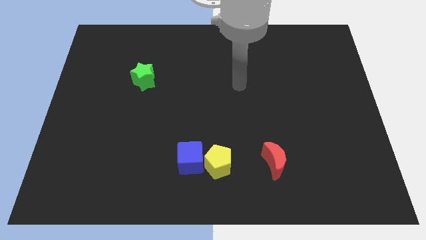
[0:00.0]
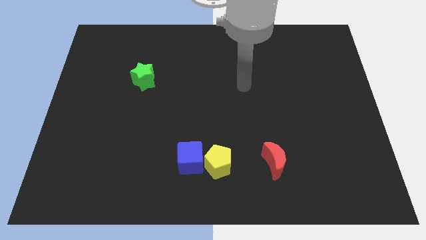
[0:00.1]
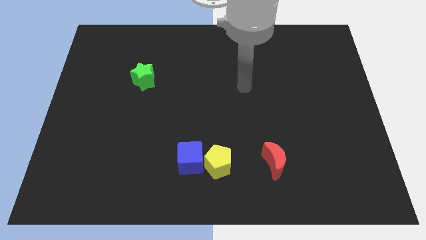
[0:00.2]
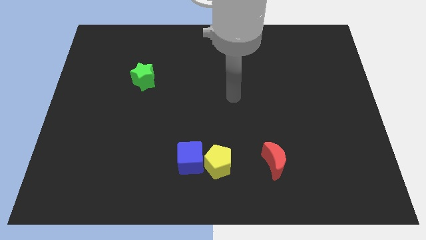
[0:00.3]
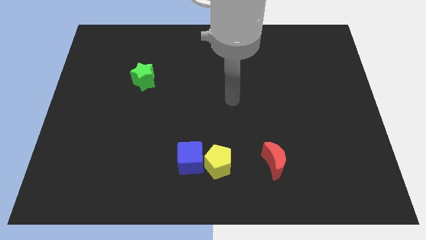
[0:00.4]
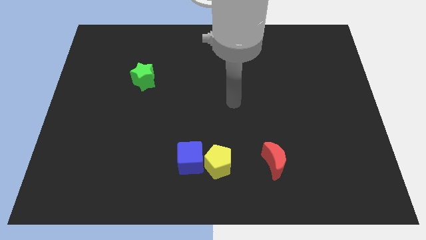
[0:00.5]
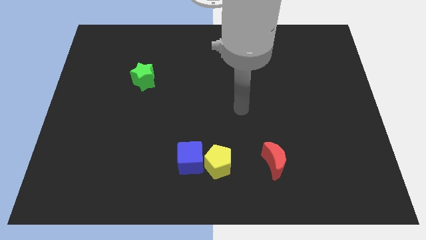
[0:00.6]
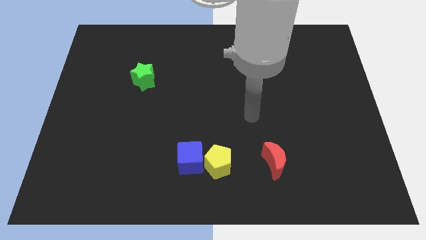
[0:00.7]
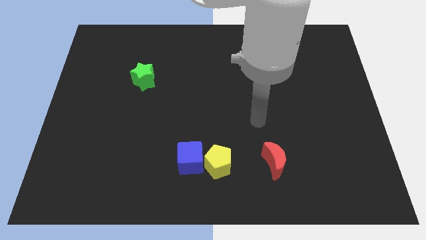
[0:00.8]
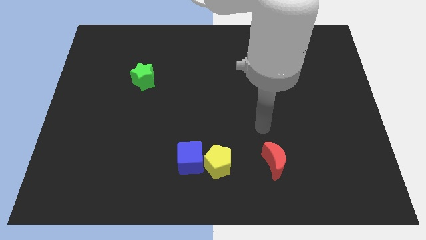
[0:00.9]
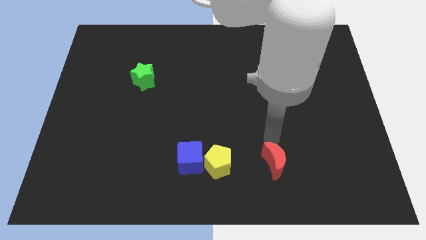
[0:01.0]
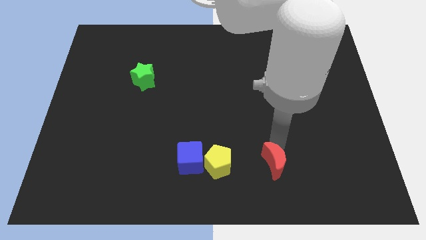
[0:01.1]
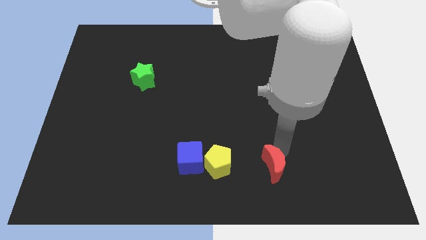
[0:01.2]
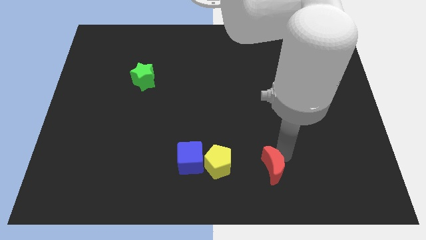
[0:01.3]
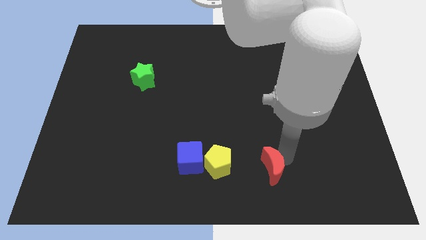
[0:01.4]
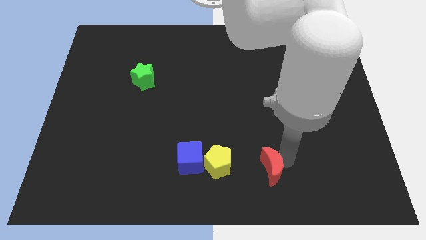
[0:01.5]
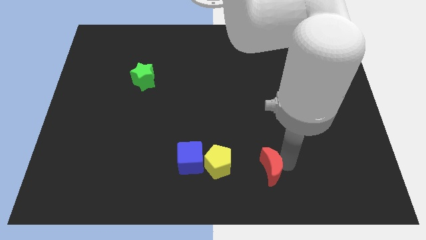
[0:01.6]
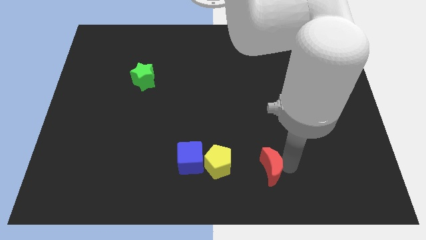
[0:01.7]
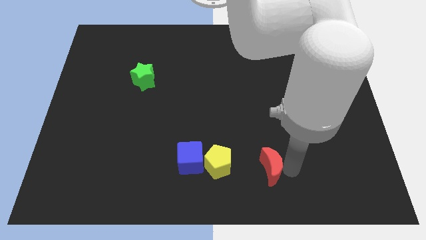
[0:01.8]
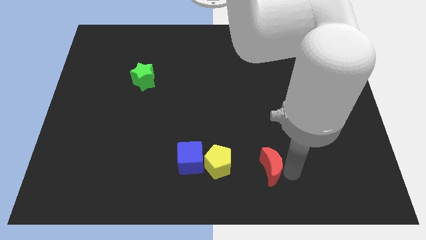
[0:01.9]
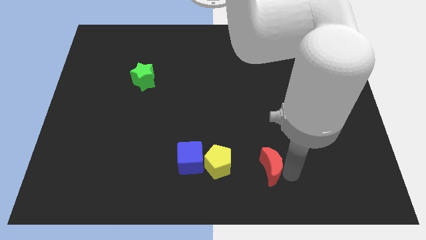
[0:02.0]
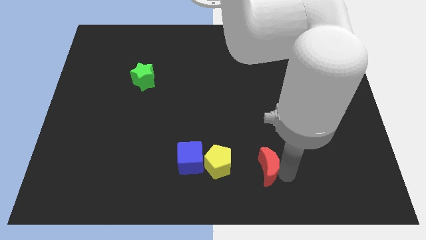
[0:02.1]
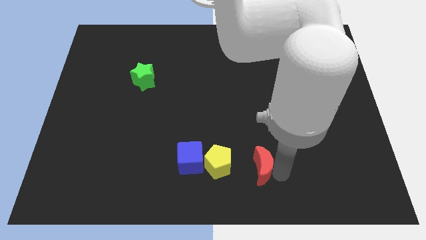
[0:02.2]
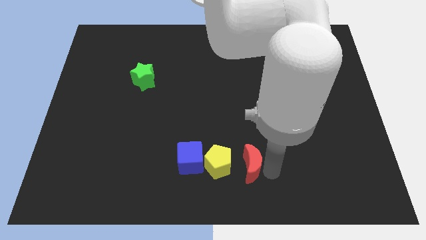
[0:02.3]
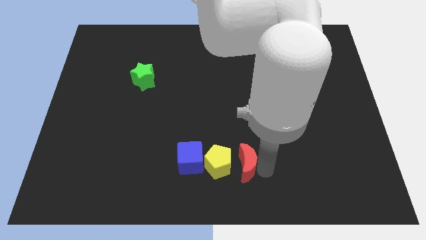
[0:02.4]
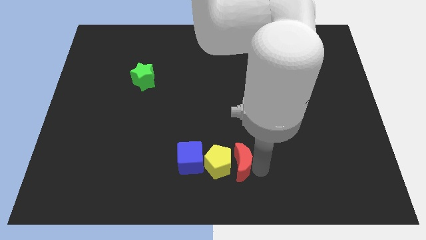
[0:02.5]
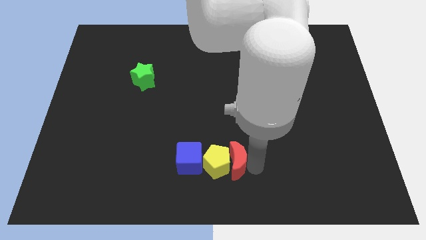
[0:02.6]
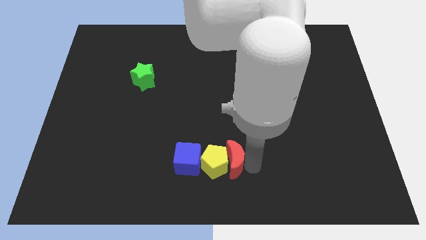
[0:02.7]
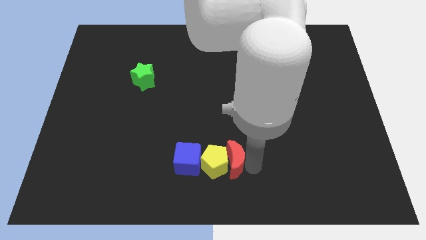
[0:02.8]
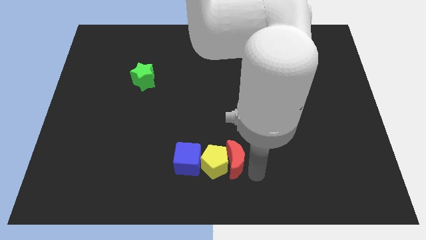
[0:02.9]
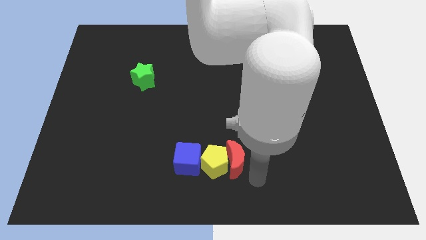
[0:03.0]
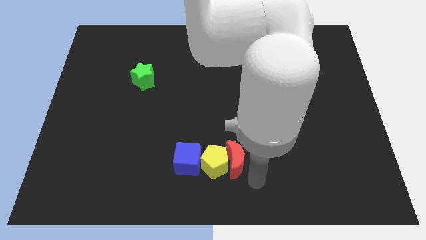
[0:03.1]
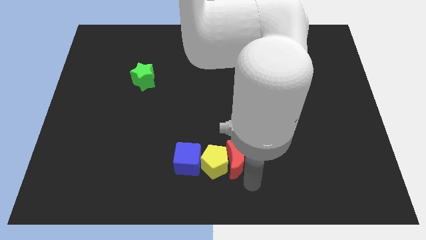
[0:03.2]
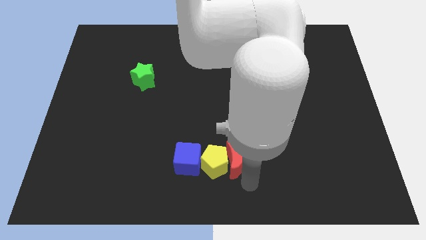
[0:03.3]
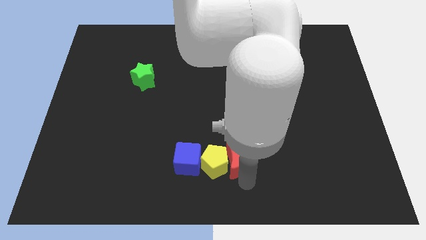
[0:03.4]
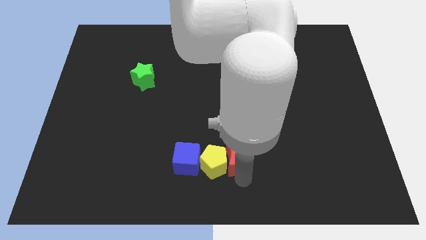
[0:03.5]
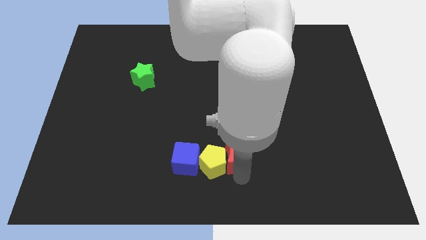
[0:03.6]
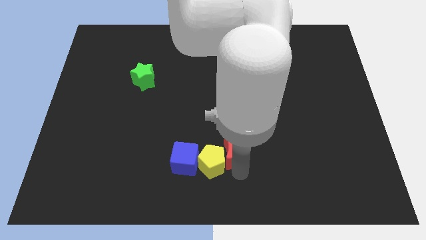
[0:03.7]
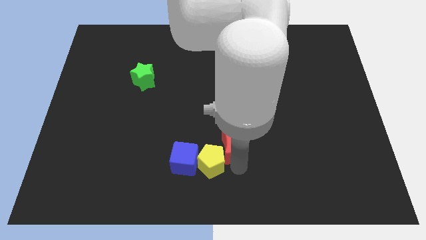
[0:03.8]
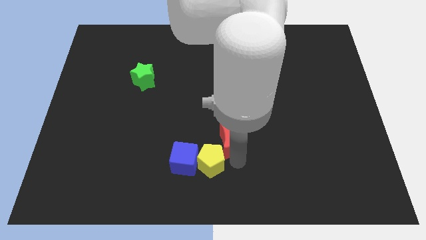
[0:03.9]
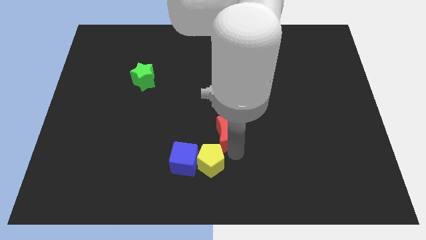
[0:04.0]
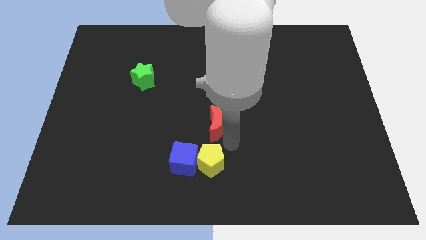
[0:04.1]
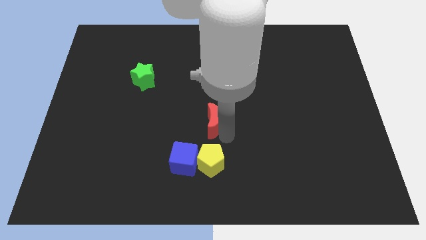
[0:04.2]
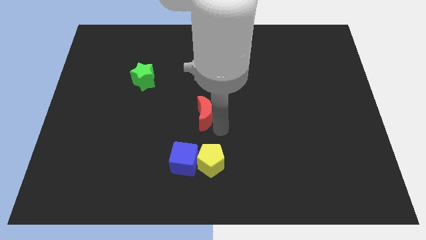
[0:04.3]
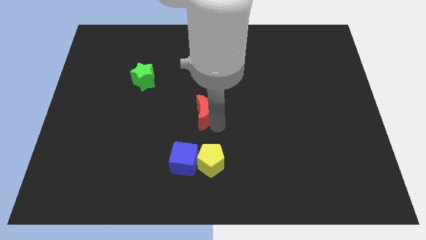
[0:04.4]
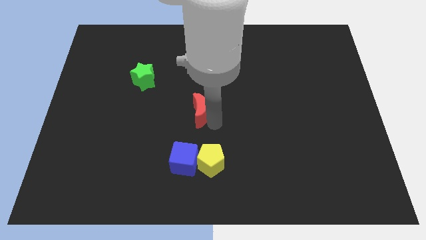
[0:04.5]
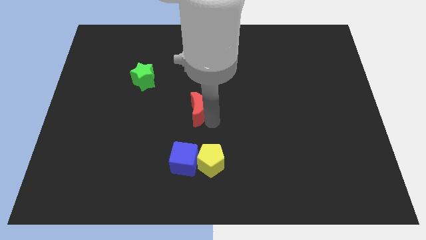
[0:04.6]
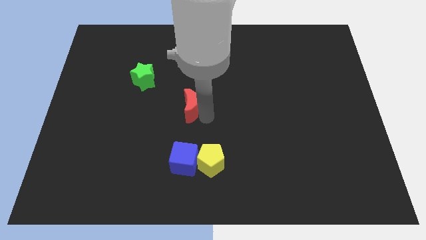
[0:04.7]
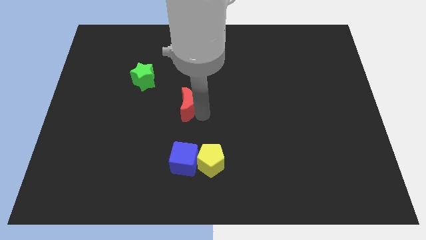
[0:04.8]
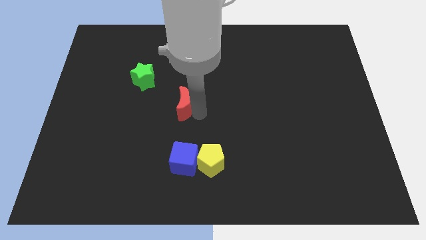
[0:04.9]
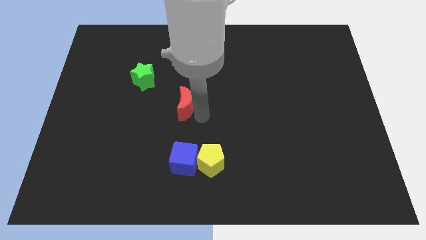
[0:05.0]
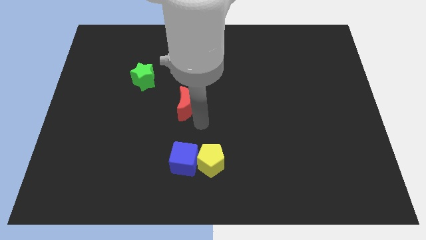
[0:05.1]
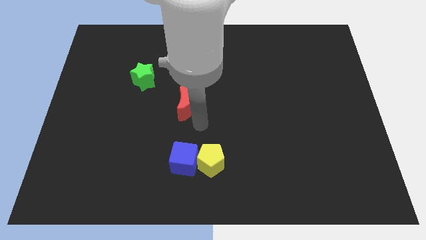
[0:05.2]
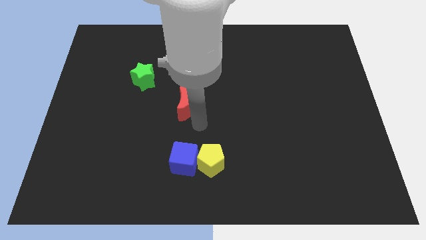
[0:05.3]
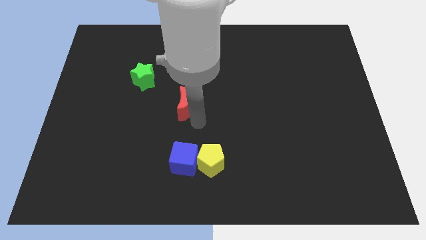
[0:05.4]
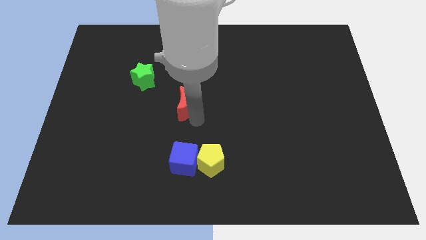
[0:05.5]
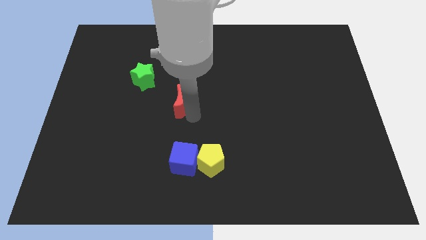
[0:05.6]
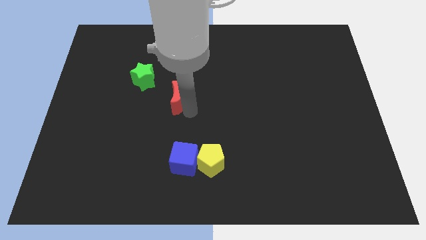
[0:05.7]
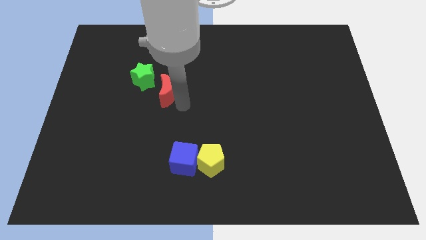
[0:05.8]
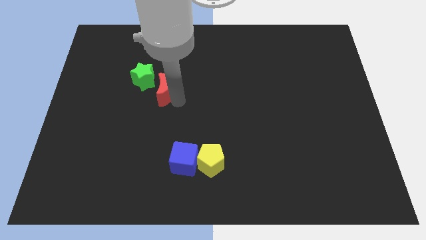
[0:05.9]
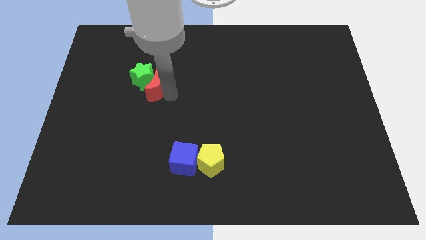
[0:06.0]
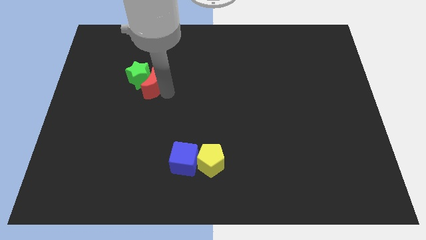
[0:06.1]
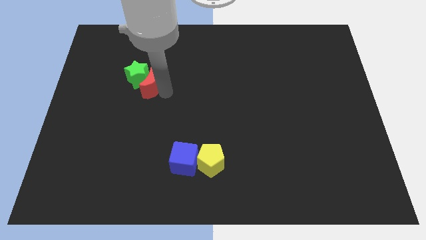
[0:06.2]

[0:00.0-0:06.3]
push the red block close to the green block

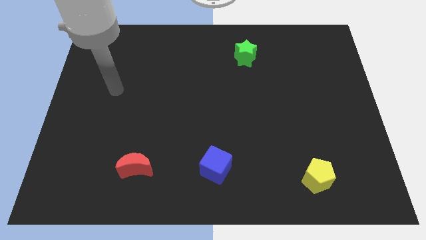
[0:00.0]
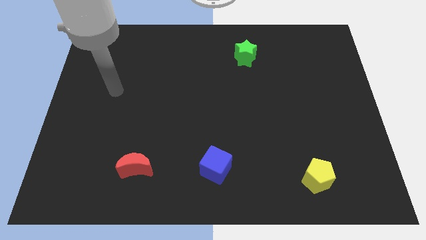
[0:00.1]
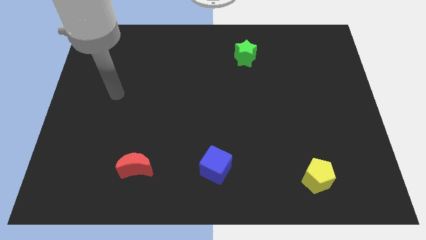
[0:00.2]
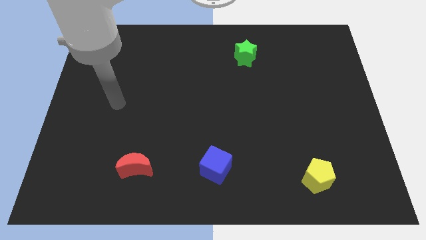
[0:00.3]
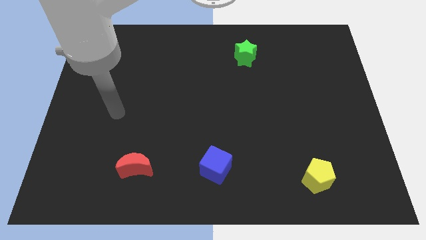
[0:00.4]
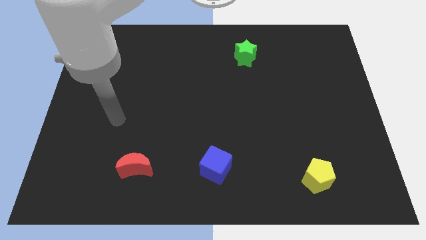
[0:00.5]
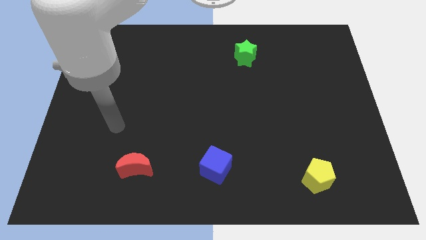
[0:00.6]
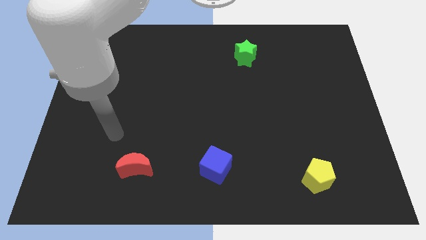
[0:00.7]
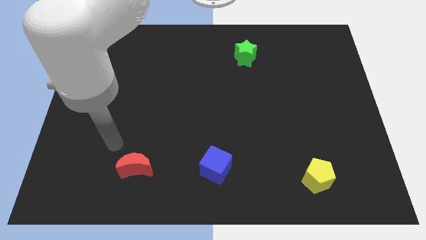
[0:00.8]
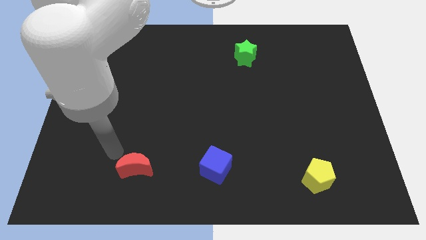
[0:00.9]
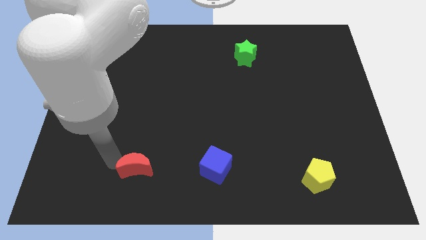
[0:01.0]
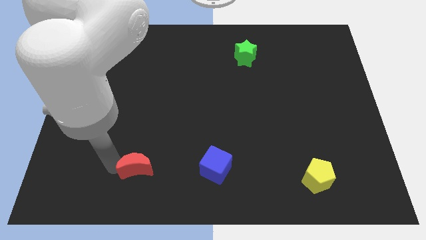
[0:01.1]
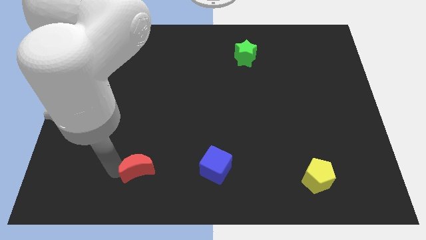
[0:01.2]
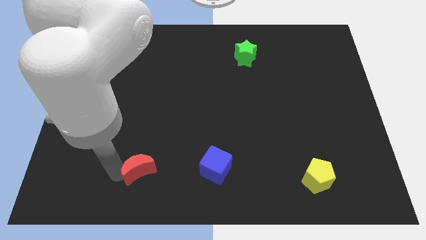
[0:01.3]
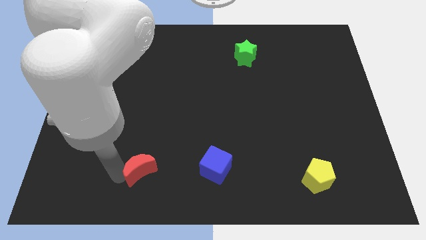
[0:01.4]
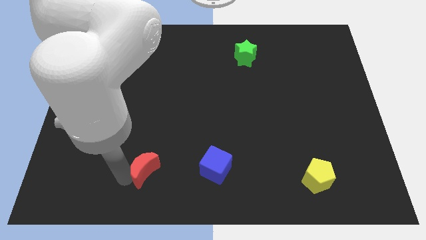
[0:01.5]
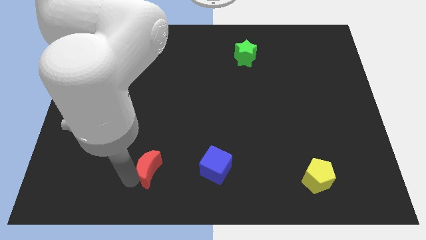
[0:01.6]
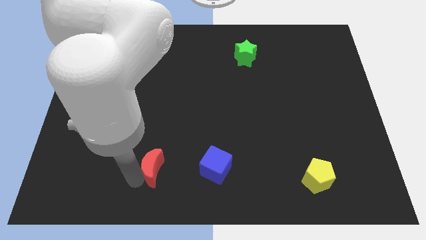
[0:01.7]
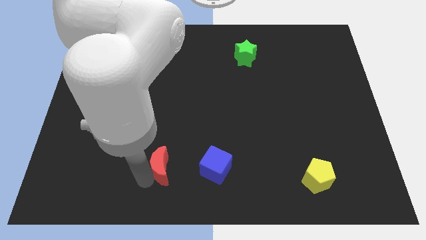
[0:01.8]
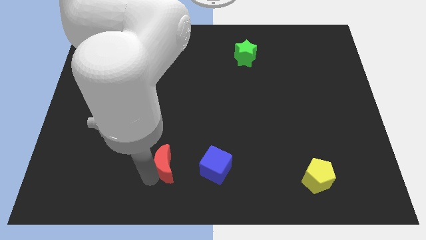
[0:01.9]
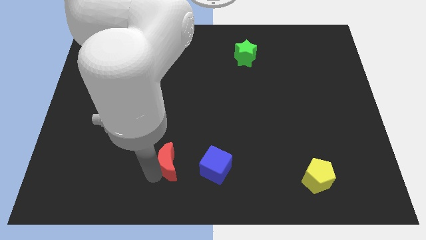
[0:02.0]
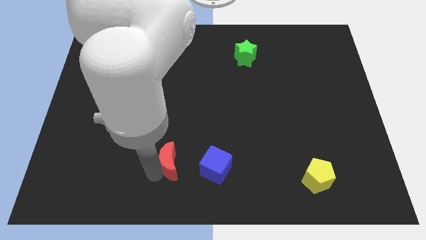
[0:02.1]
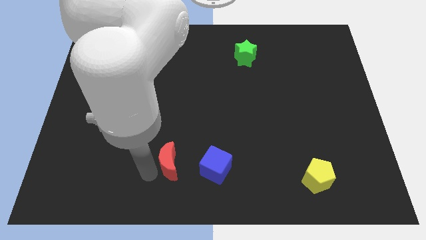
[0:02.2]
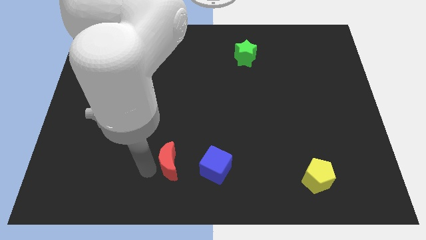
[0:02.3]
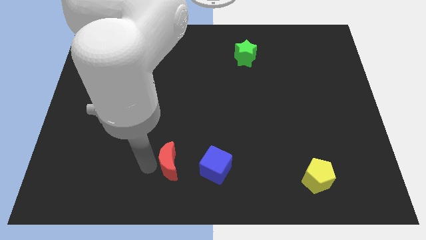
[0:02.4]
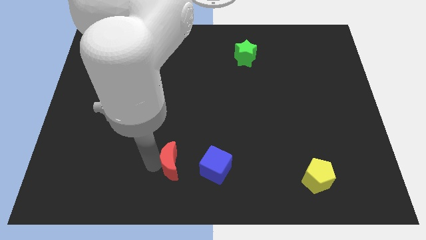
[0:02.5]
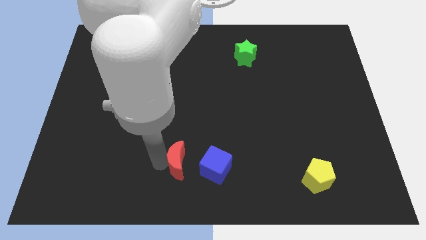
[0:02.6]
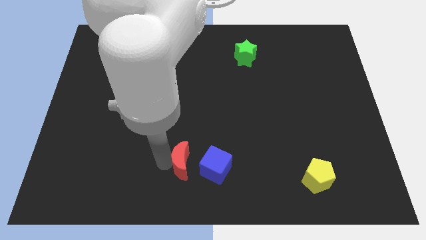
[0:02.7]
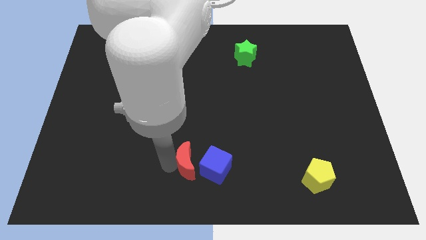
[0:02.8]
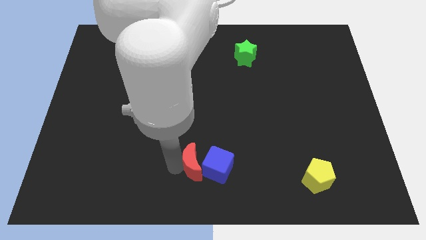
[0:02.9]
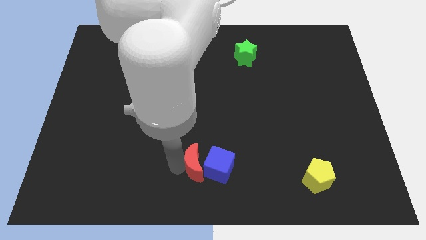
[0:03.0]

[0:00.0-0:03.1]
push the red moon to the blue block
